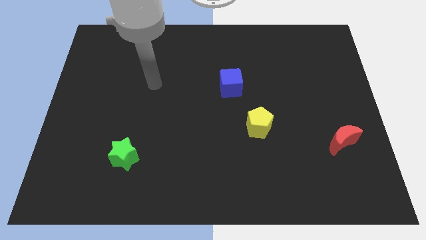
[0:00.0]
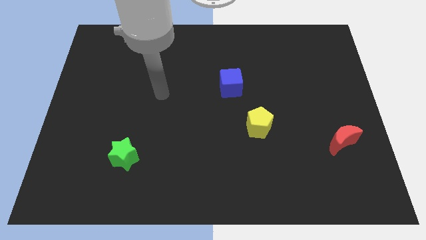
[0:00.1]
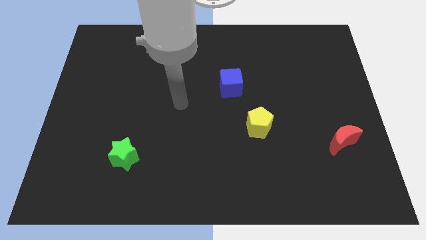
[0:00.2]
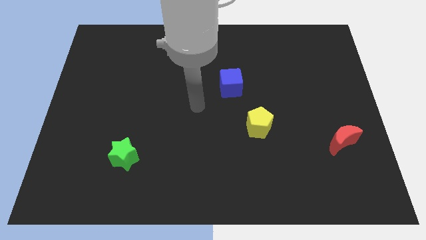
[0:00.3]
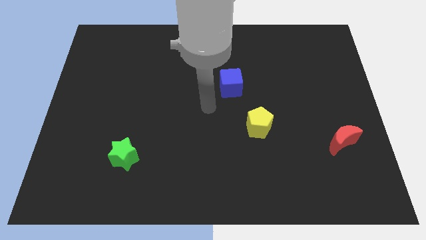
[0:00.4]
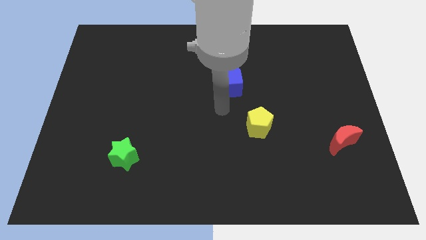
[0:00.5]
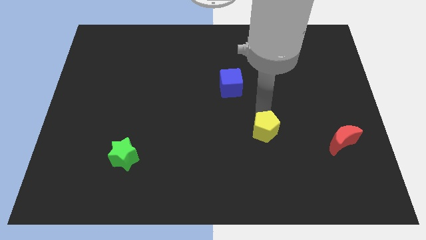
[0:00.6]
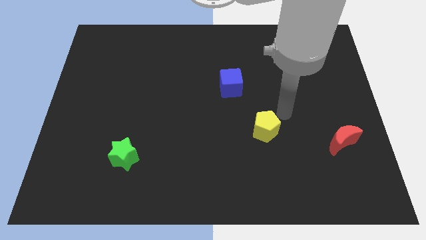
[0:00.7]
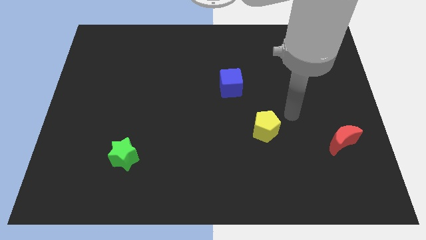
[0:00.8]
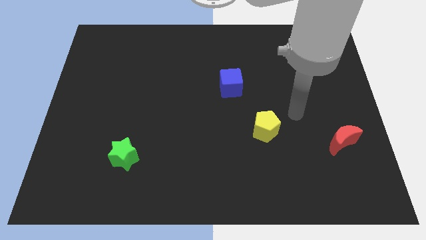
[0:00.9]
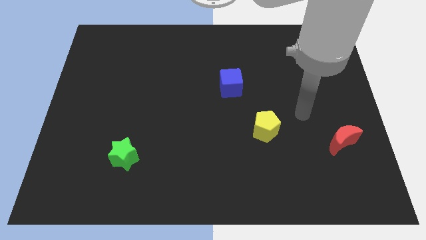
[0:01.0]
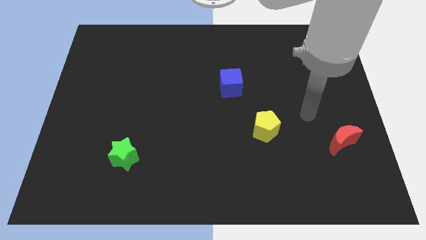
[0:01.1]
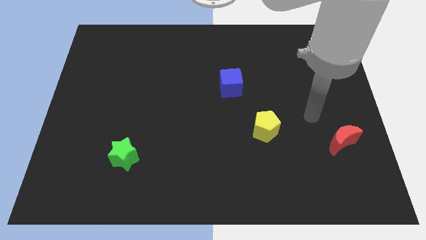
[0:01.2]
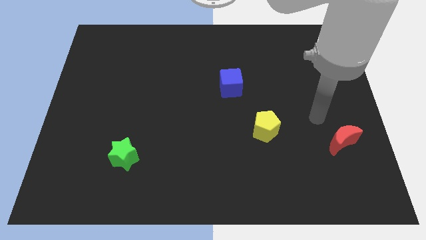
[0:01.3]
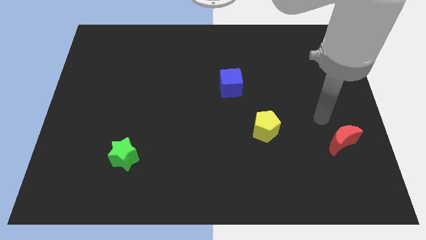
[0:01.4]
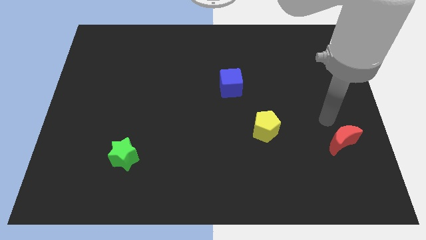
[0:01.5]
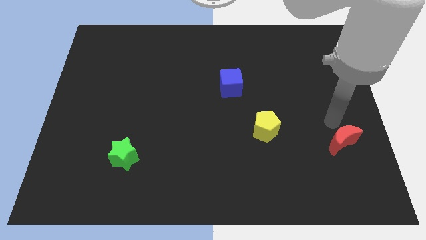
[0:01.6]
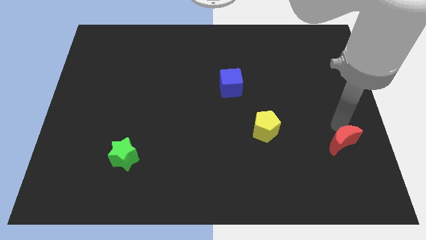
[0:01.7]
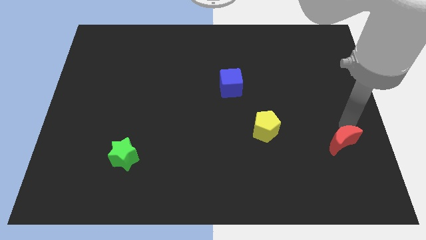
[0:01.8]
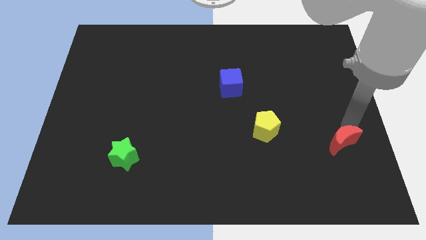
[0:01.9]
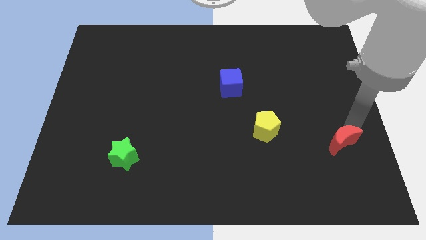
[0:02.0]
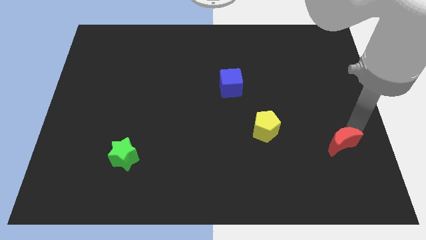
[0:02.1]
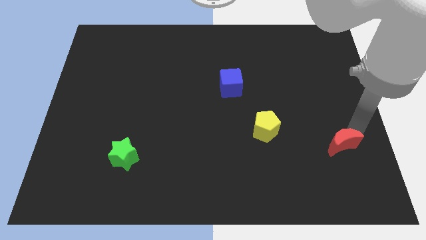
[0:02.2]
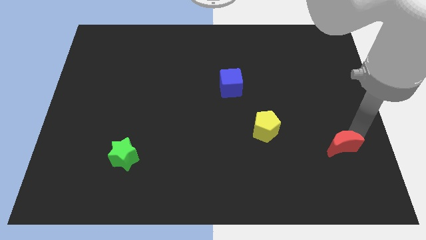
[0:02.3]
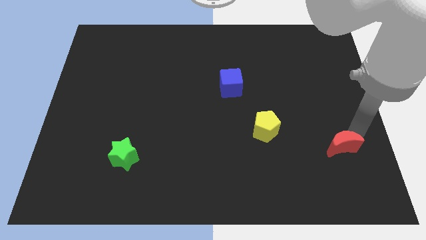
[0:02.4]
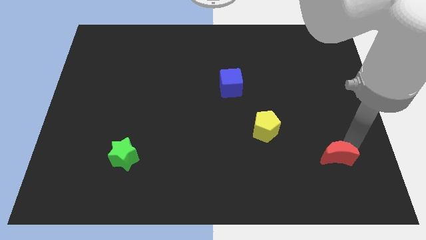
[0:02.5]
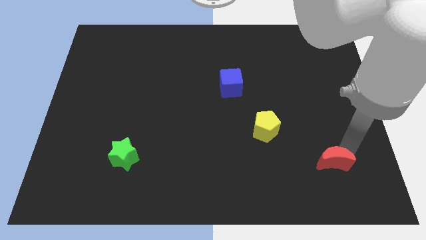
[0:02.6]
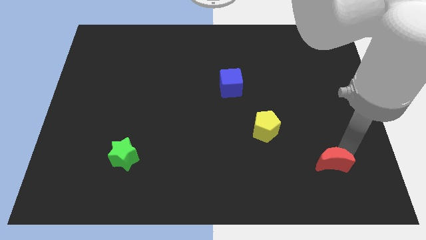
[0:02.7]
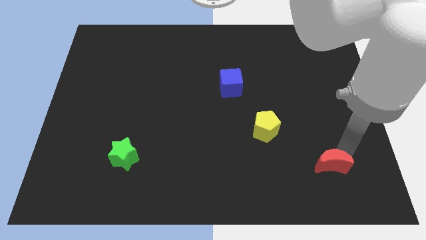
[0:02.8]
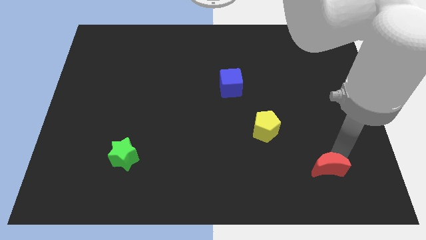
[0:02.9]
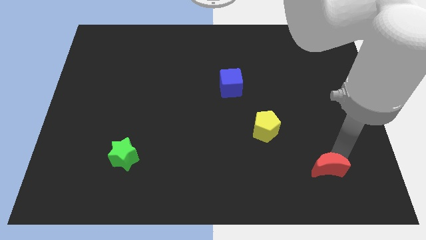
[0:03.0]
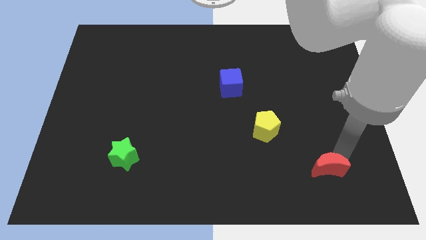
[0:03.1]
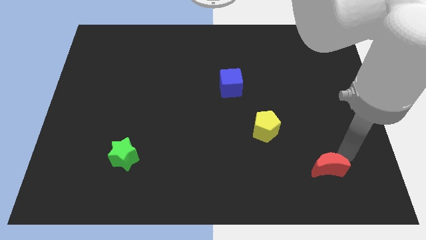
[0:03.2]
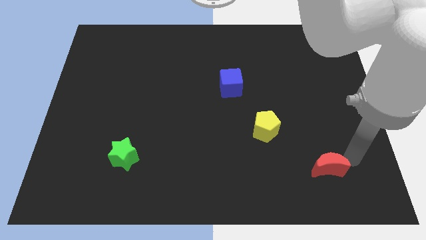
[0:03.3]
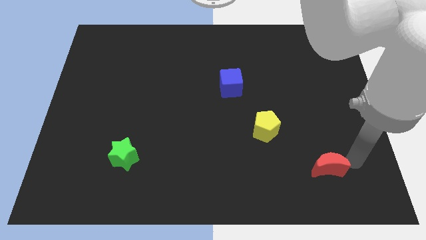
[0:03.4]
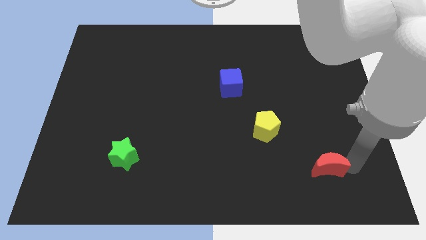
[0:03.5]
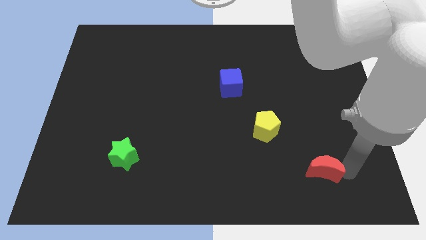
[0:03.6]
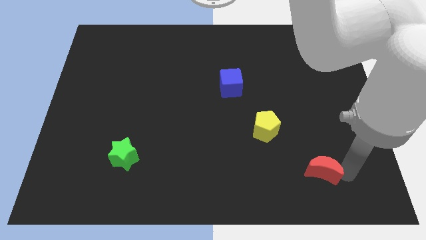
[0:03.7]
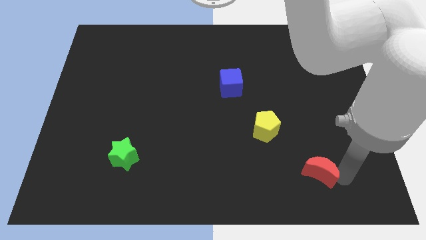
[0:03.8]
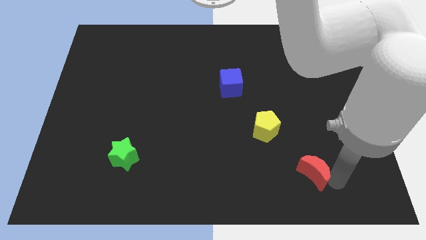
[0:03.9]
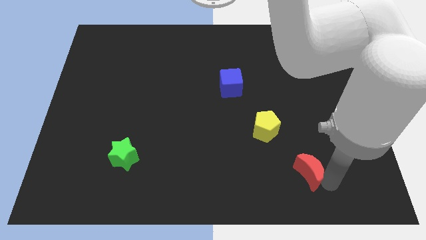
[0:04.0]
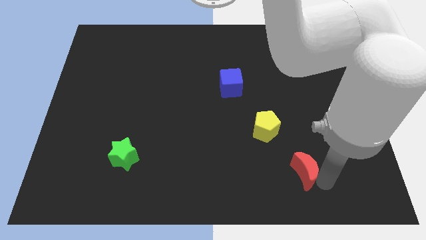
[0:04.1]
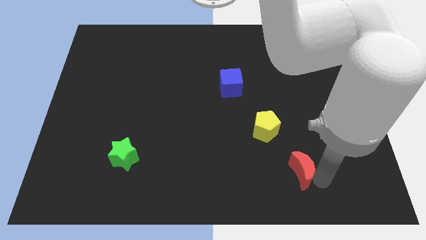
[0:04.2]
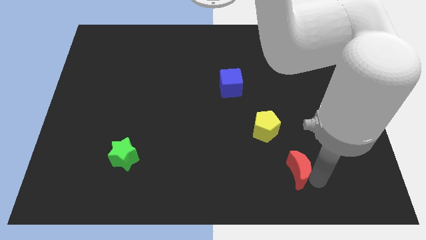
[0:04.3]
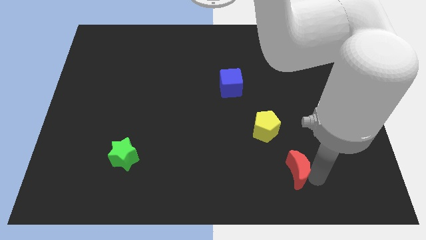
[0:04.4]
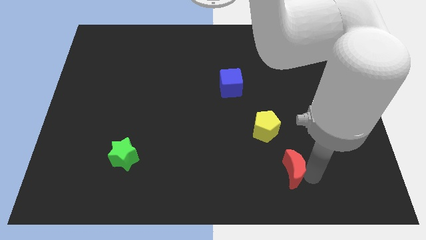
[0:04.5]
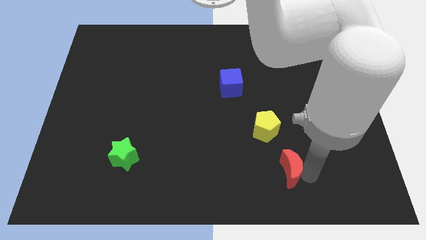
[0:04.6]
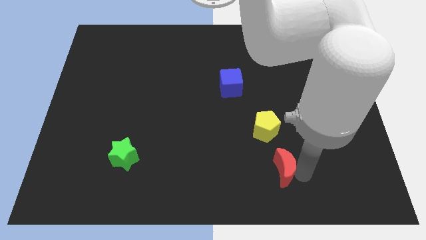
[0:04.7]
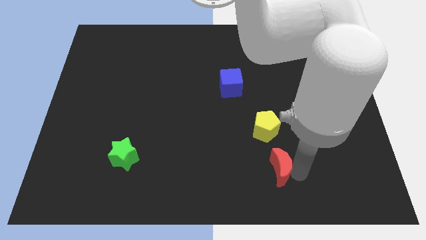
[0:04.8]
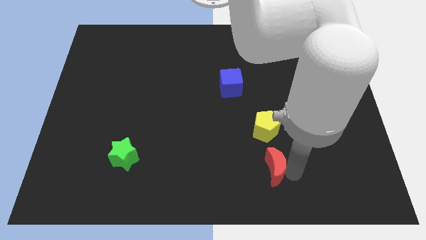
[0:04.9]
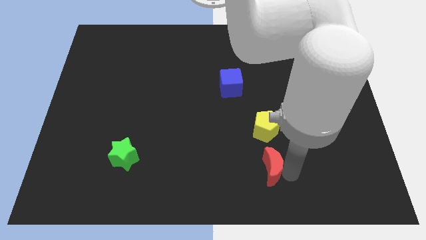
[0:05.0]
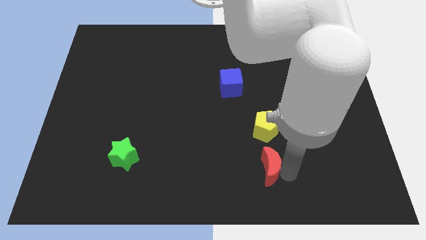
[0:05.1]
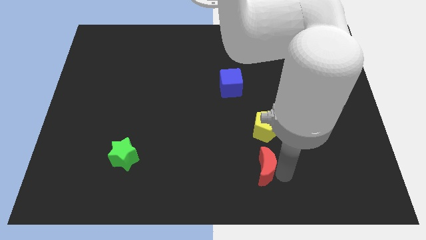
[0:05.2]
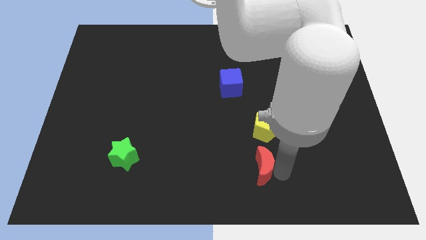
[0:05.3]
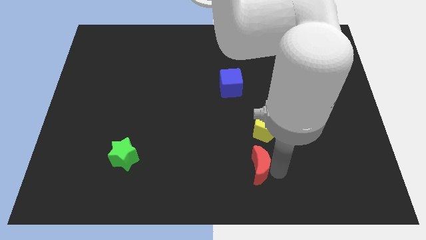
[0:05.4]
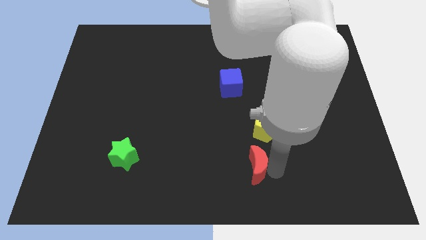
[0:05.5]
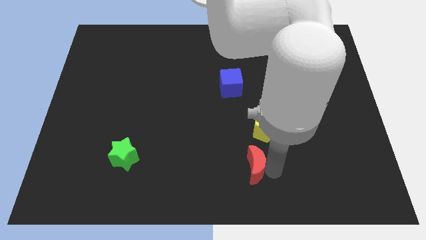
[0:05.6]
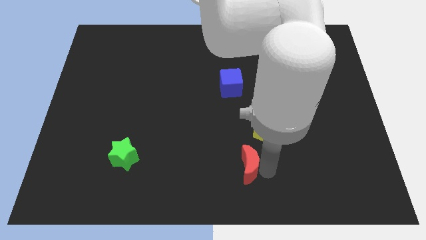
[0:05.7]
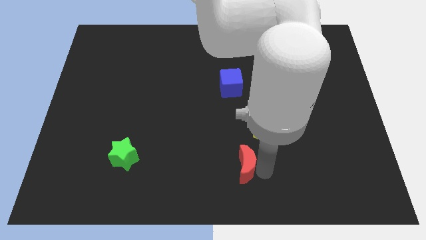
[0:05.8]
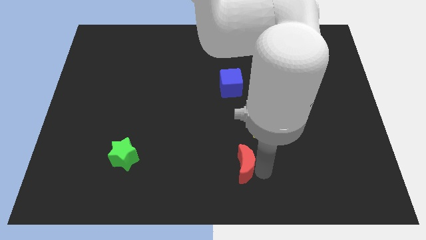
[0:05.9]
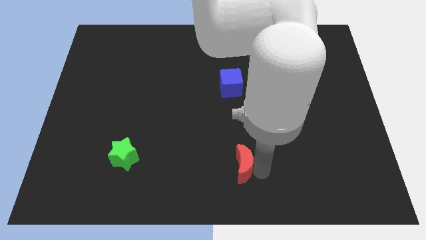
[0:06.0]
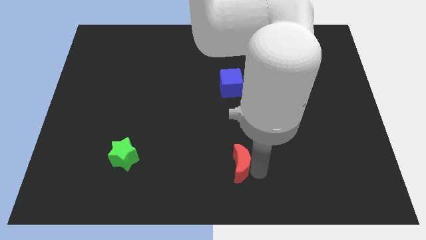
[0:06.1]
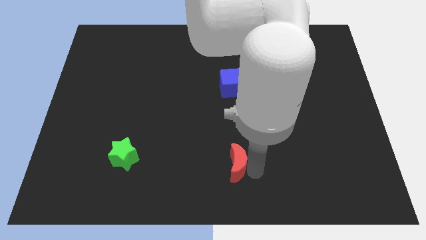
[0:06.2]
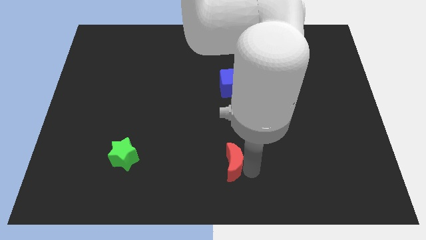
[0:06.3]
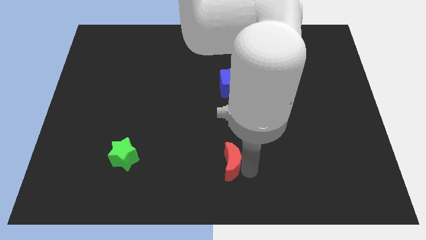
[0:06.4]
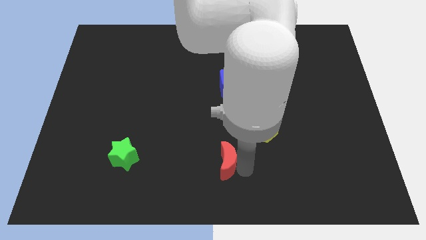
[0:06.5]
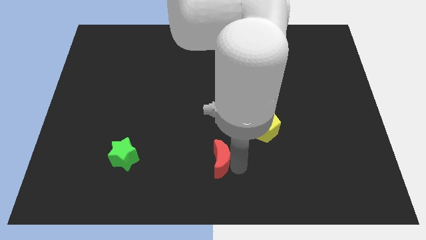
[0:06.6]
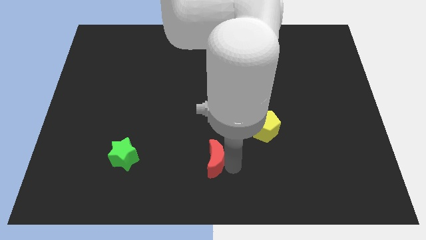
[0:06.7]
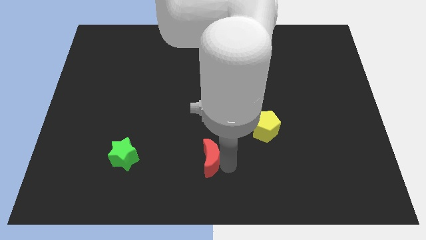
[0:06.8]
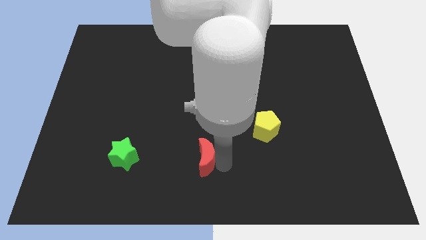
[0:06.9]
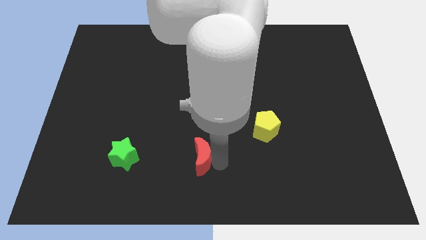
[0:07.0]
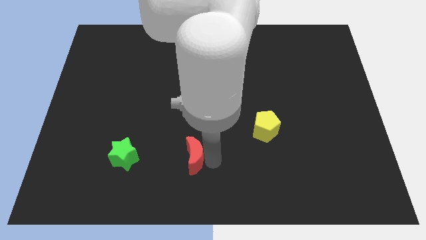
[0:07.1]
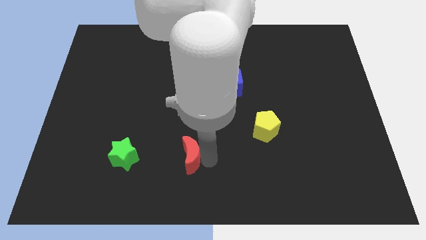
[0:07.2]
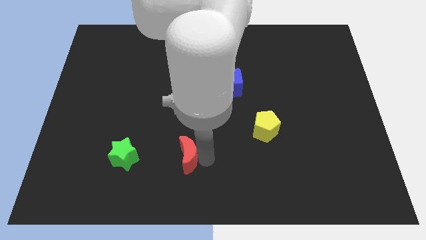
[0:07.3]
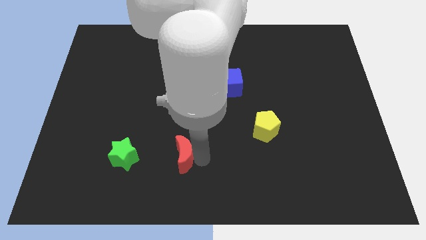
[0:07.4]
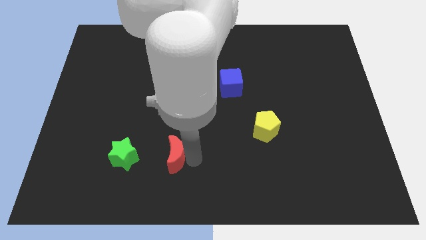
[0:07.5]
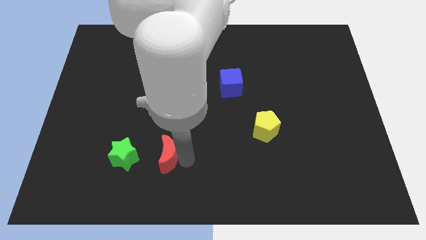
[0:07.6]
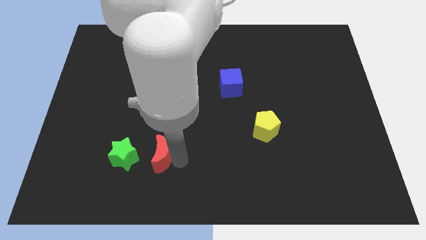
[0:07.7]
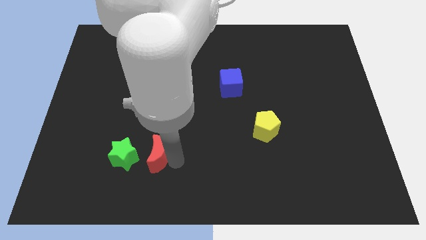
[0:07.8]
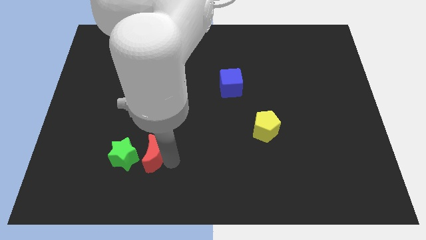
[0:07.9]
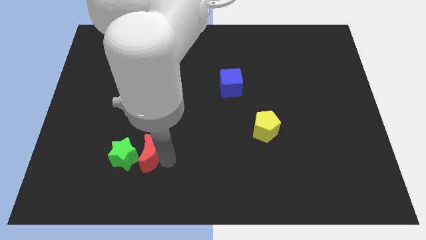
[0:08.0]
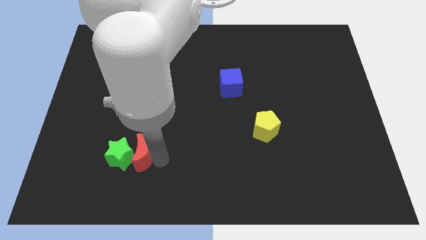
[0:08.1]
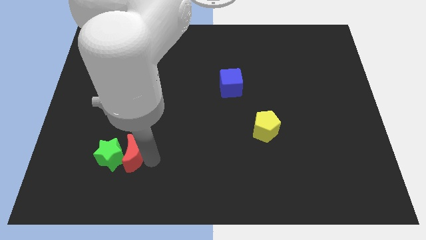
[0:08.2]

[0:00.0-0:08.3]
put the red moon towards the green block
